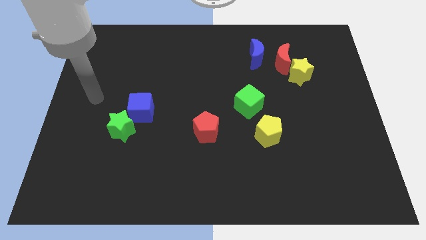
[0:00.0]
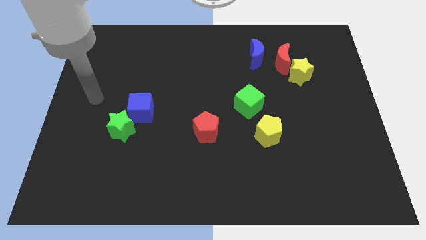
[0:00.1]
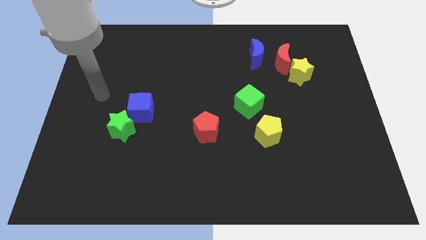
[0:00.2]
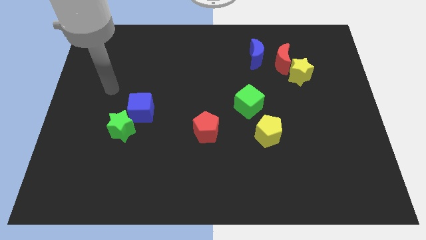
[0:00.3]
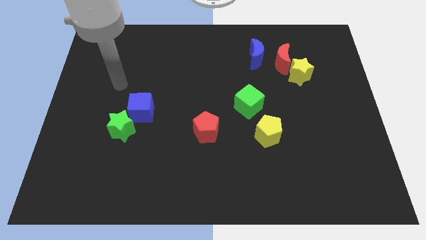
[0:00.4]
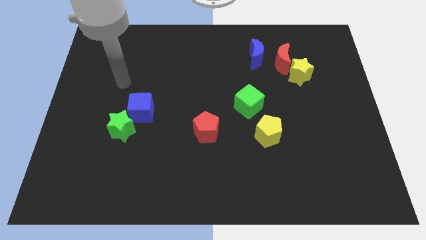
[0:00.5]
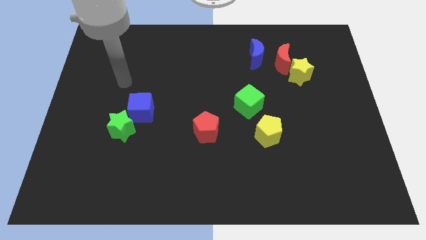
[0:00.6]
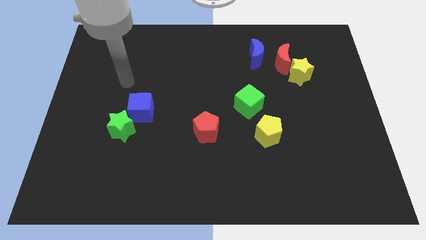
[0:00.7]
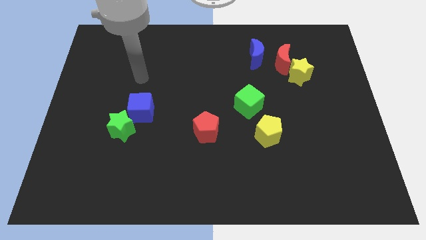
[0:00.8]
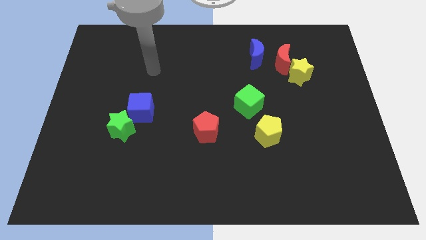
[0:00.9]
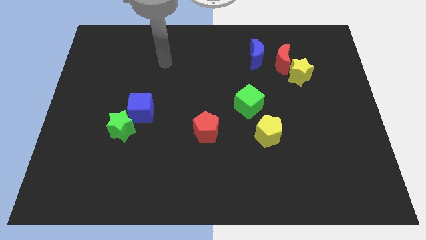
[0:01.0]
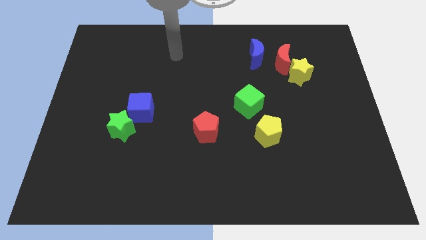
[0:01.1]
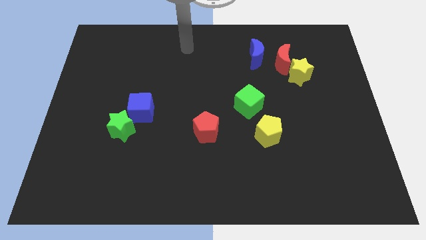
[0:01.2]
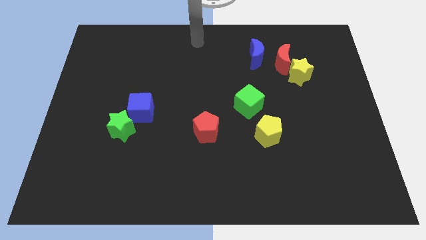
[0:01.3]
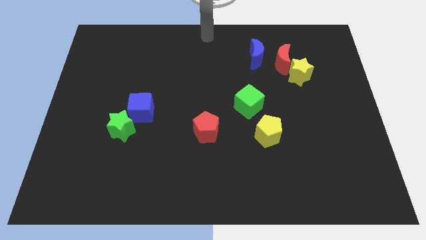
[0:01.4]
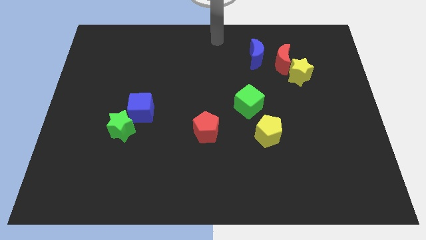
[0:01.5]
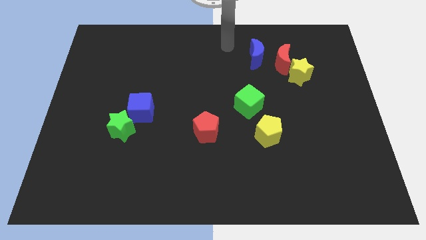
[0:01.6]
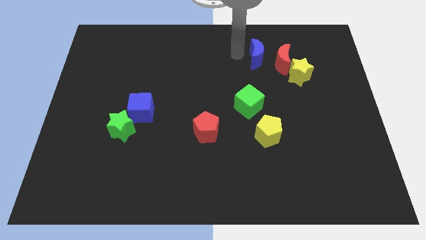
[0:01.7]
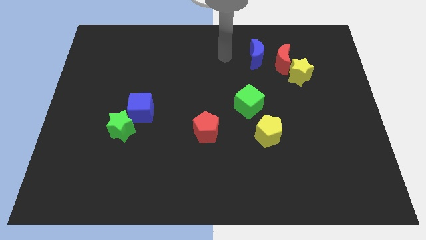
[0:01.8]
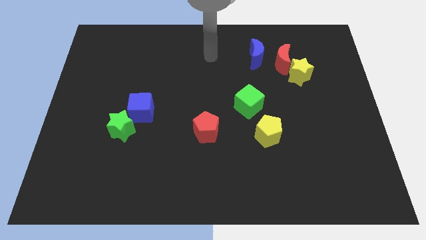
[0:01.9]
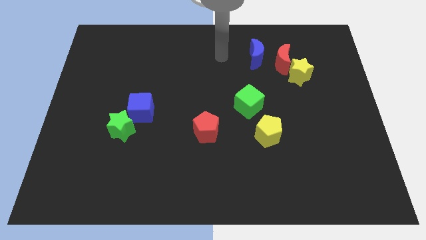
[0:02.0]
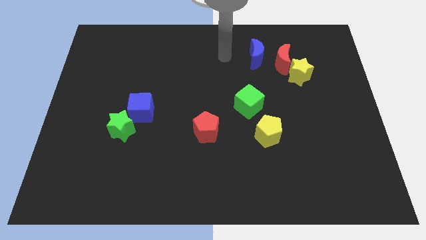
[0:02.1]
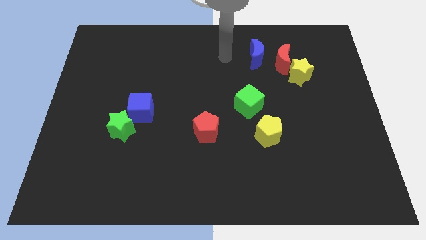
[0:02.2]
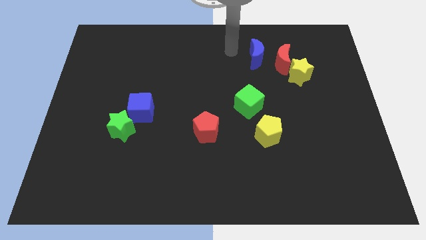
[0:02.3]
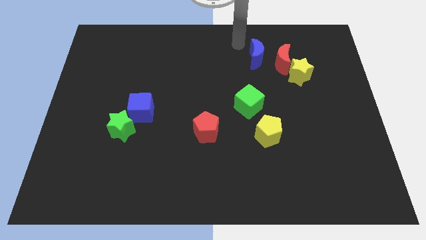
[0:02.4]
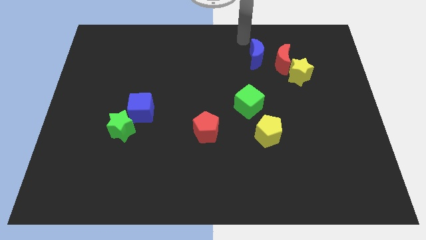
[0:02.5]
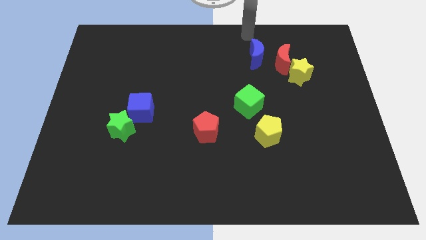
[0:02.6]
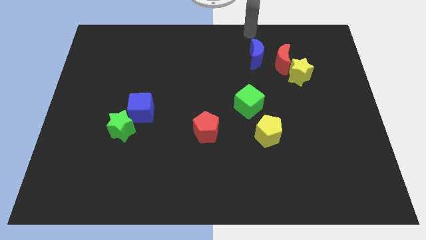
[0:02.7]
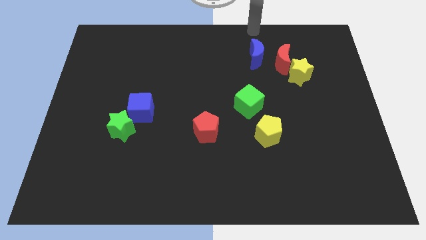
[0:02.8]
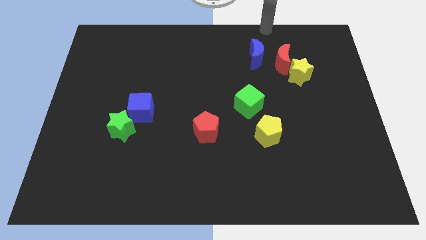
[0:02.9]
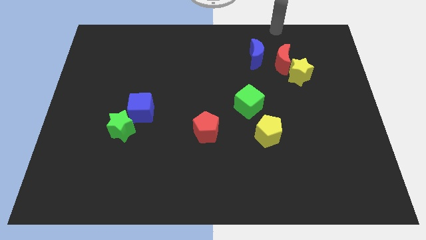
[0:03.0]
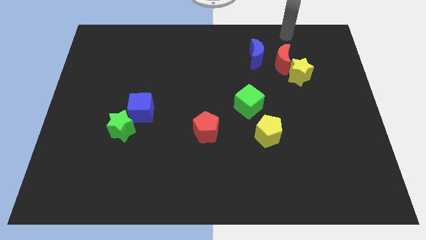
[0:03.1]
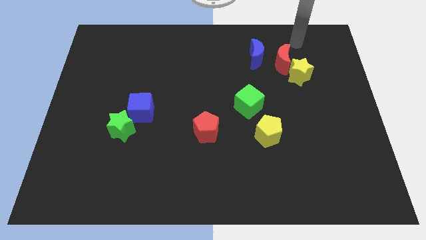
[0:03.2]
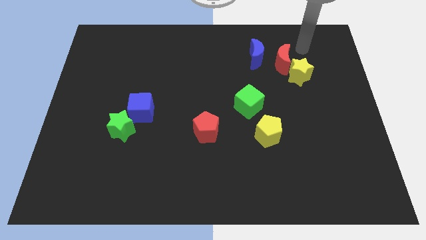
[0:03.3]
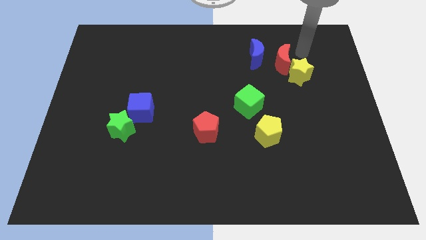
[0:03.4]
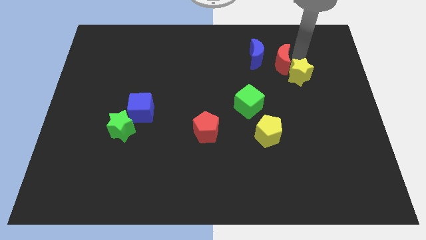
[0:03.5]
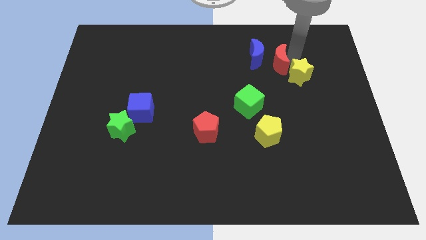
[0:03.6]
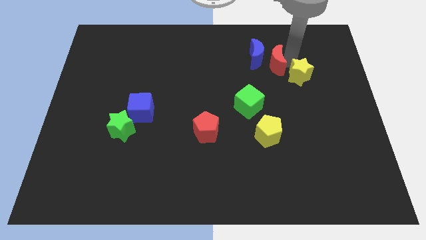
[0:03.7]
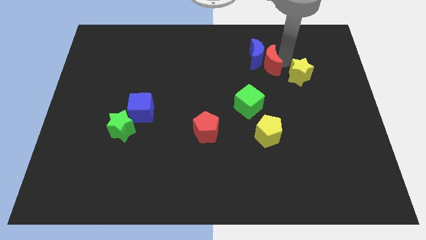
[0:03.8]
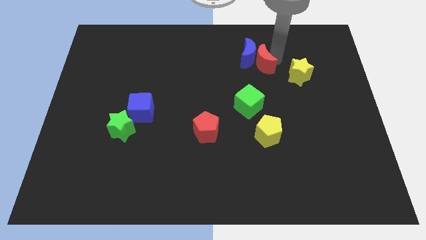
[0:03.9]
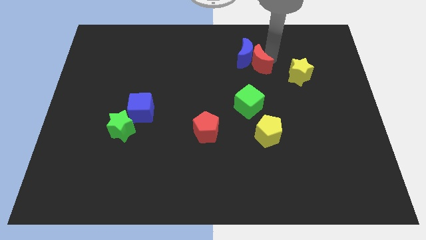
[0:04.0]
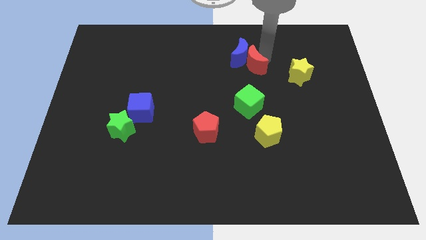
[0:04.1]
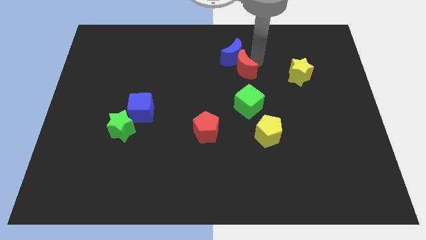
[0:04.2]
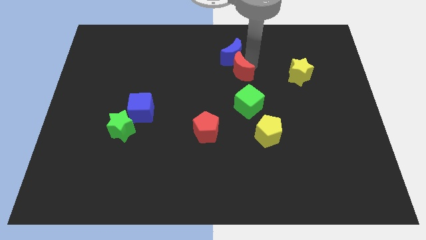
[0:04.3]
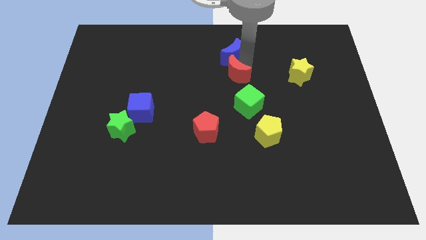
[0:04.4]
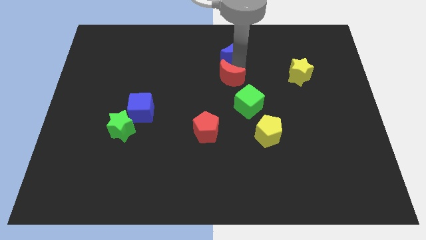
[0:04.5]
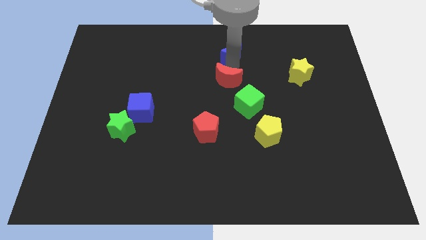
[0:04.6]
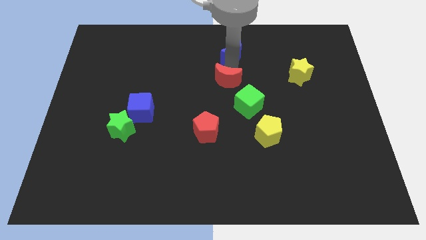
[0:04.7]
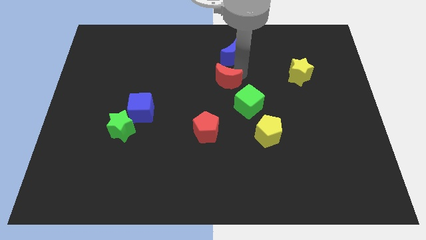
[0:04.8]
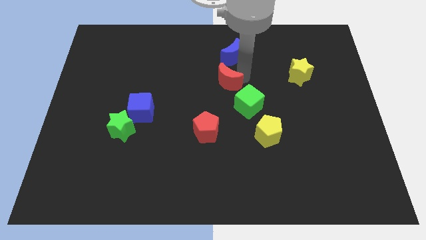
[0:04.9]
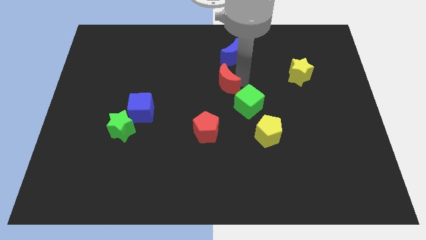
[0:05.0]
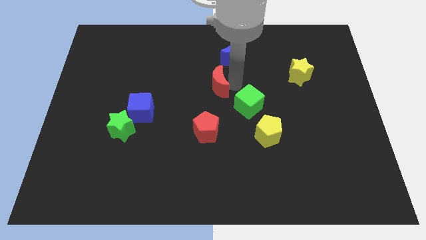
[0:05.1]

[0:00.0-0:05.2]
move the red moon to the center

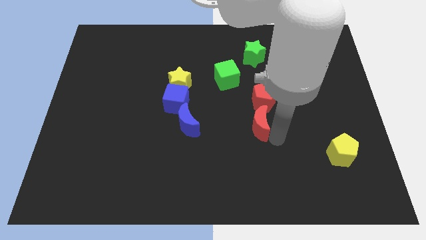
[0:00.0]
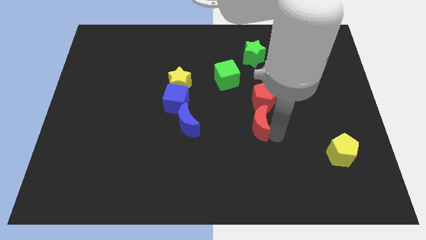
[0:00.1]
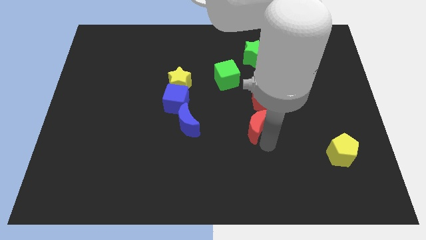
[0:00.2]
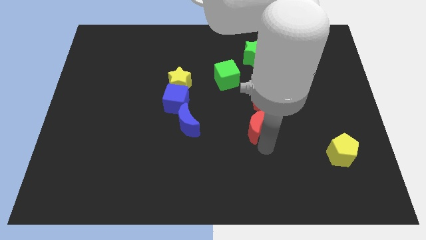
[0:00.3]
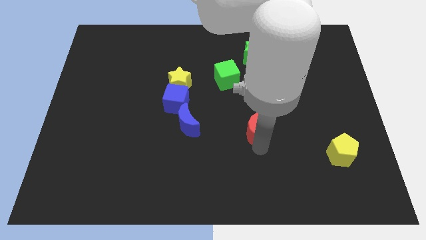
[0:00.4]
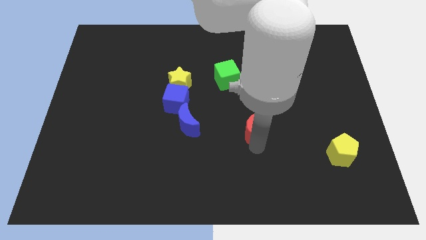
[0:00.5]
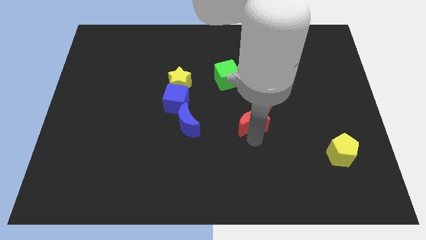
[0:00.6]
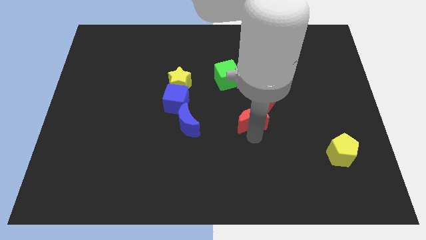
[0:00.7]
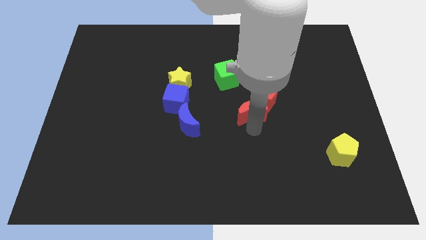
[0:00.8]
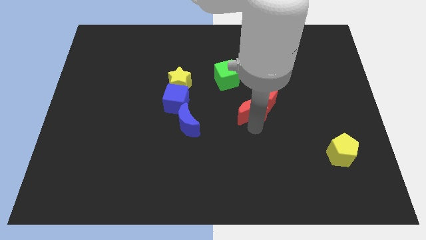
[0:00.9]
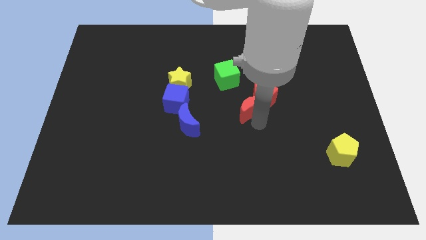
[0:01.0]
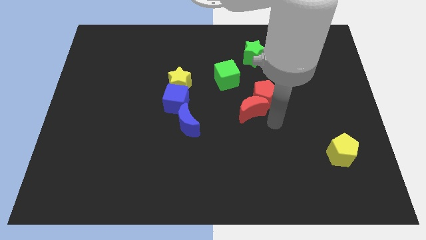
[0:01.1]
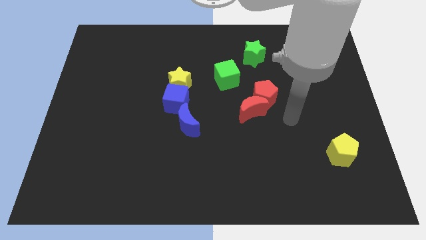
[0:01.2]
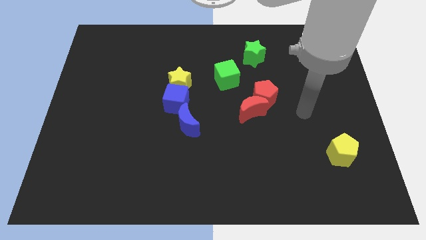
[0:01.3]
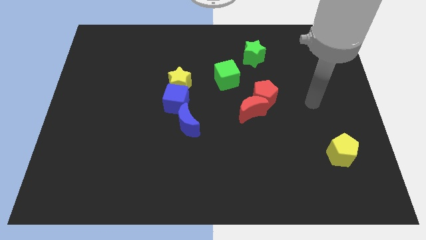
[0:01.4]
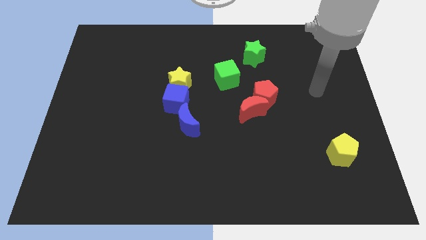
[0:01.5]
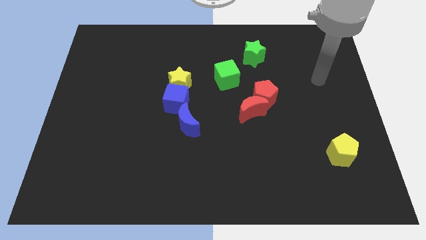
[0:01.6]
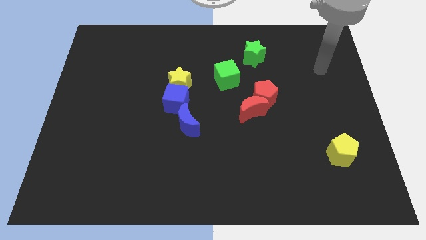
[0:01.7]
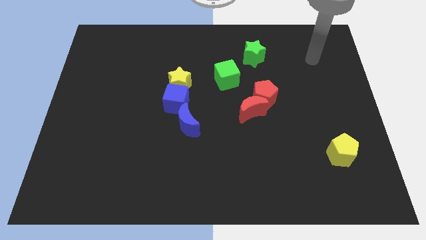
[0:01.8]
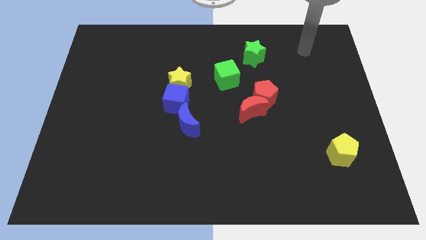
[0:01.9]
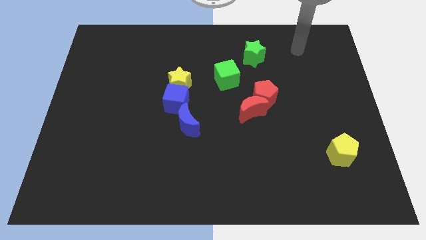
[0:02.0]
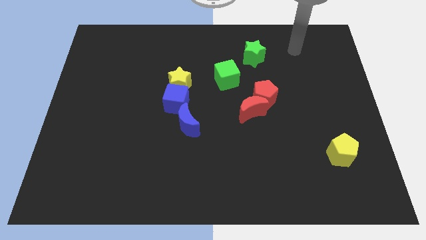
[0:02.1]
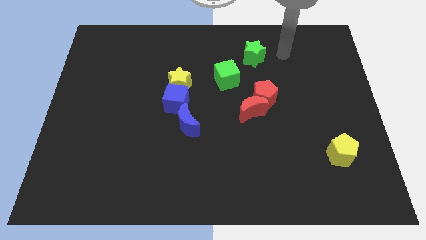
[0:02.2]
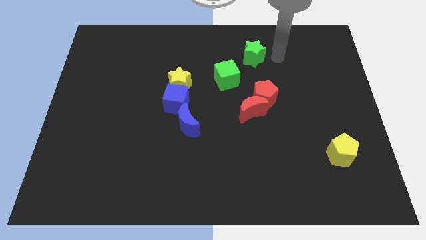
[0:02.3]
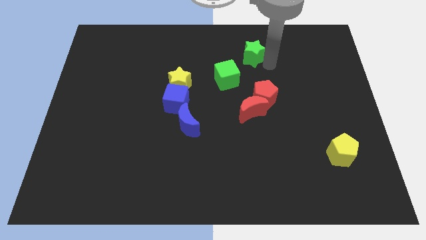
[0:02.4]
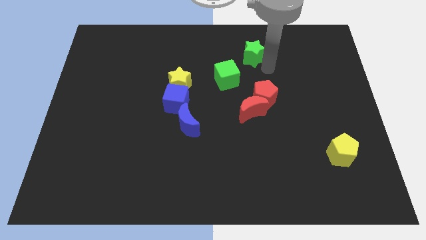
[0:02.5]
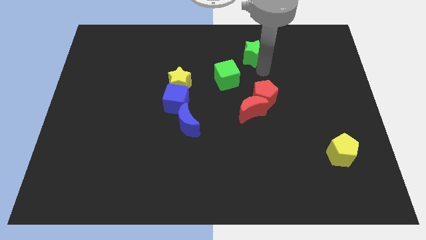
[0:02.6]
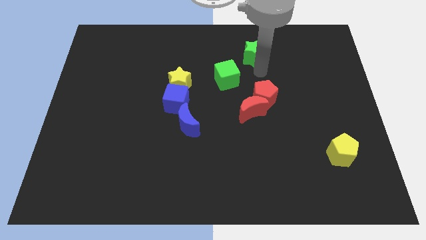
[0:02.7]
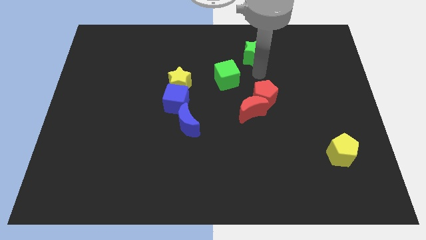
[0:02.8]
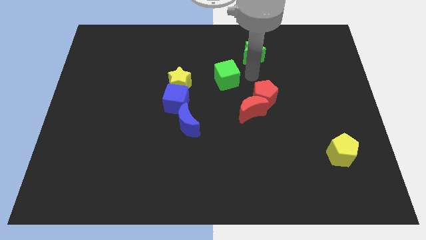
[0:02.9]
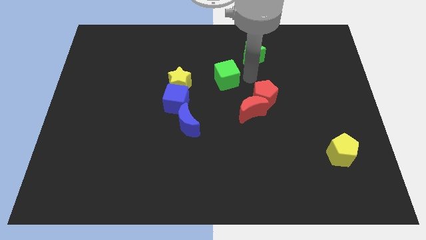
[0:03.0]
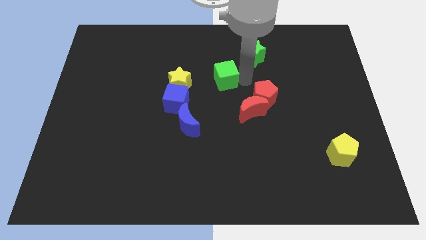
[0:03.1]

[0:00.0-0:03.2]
move the red crescent into the red pentagon

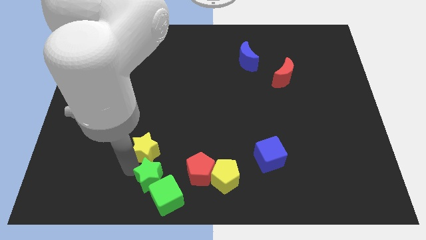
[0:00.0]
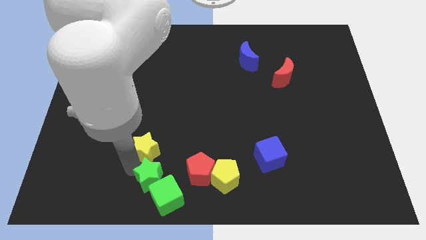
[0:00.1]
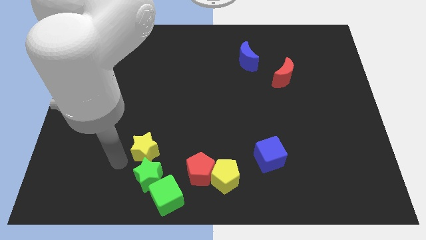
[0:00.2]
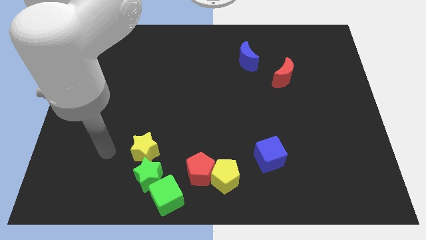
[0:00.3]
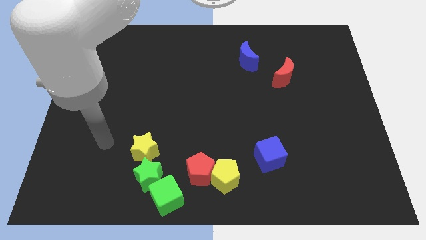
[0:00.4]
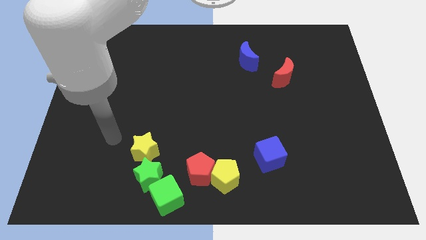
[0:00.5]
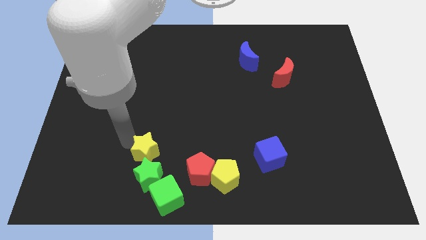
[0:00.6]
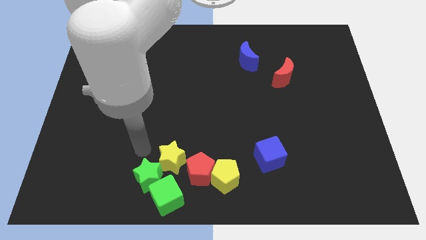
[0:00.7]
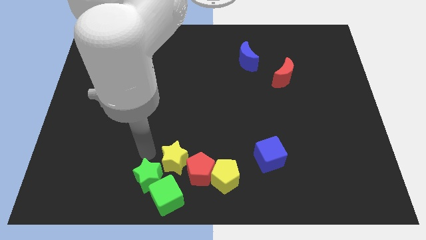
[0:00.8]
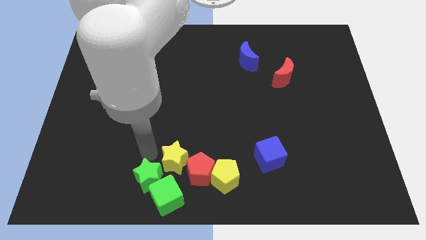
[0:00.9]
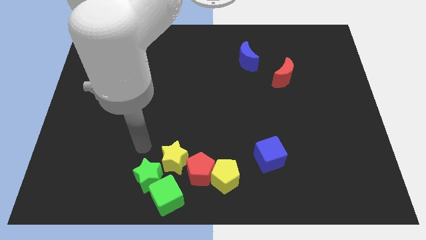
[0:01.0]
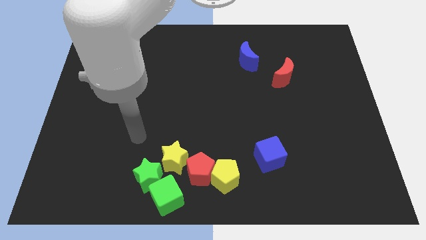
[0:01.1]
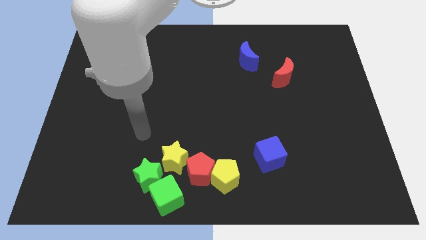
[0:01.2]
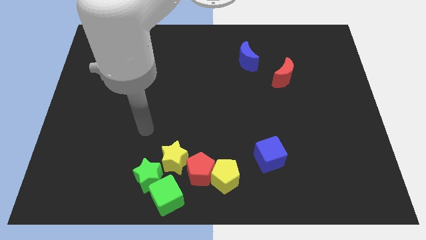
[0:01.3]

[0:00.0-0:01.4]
push the yellow star close to the red pentagon
